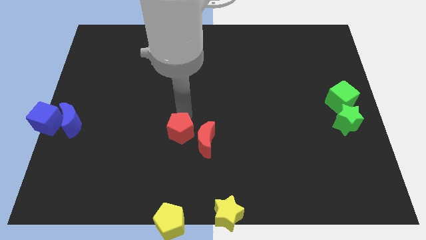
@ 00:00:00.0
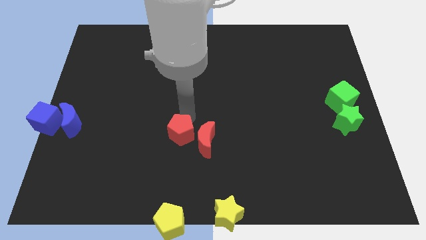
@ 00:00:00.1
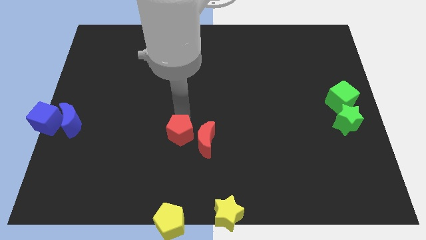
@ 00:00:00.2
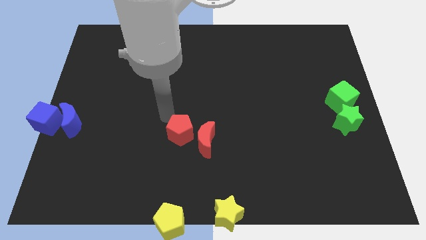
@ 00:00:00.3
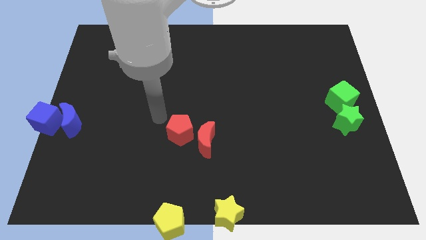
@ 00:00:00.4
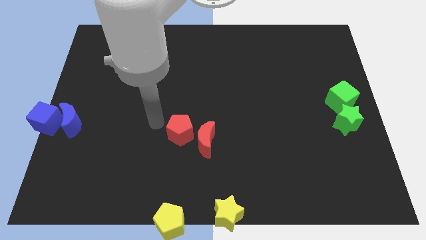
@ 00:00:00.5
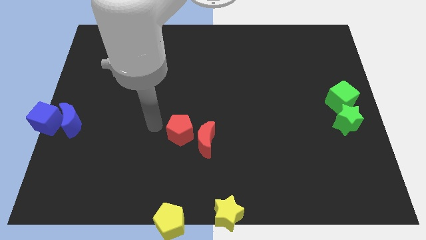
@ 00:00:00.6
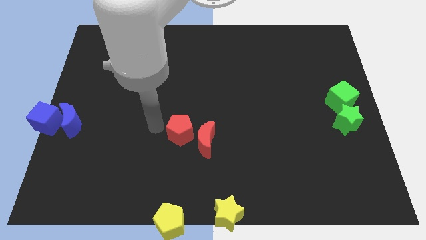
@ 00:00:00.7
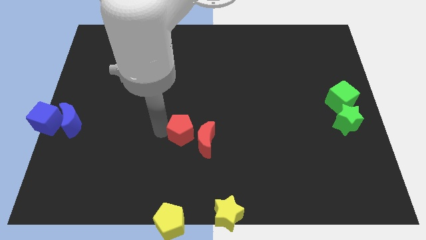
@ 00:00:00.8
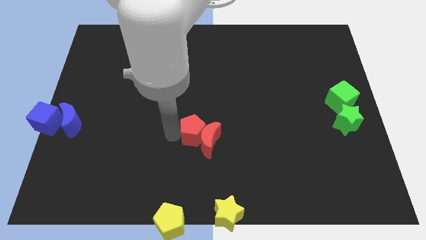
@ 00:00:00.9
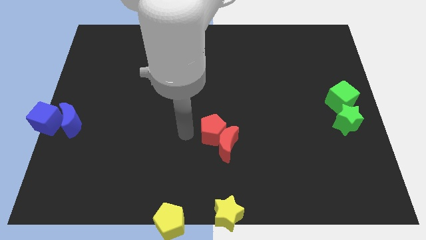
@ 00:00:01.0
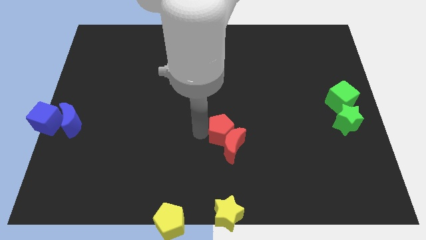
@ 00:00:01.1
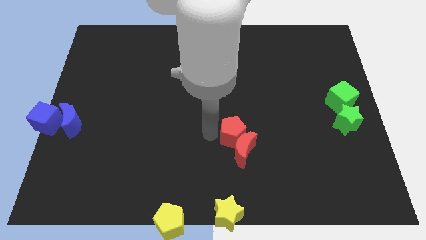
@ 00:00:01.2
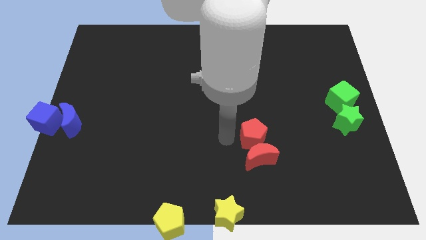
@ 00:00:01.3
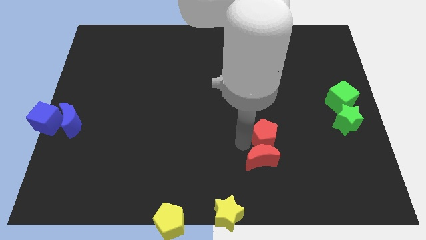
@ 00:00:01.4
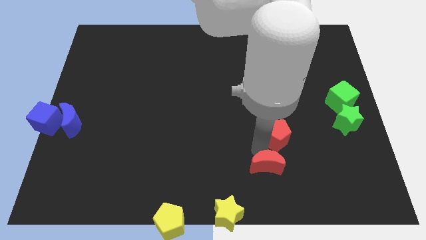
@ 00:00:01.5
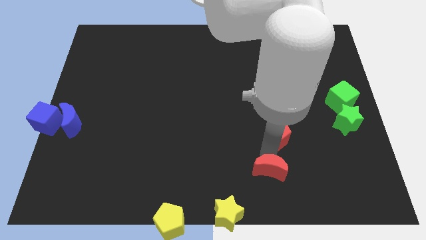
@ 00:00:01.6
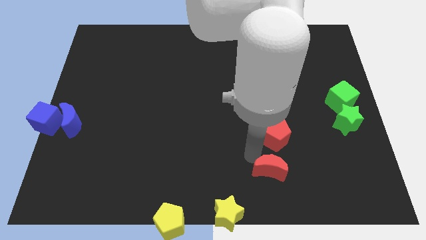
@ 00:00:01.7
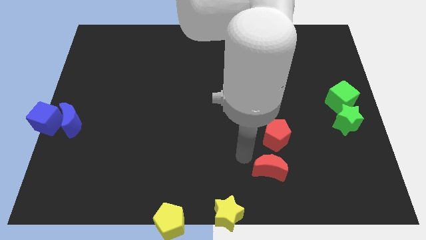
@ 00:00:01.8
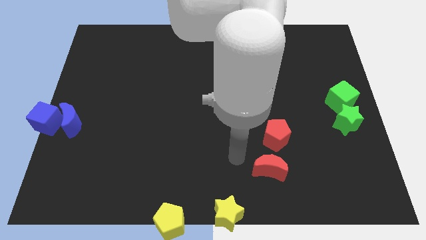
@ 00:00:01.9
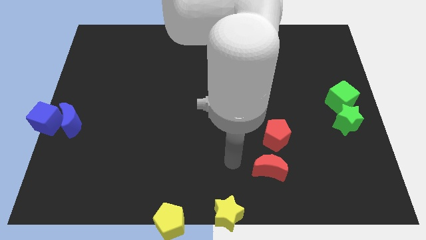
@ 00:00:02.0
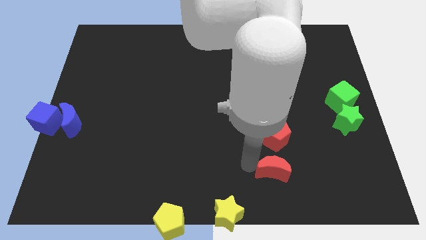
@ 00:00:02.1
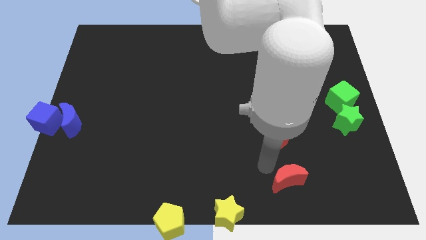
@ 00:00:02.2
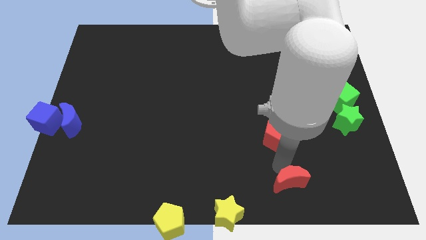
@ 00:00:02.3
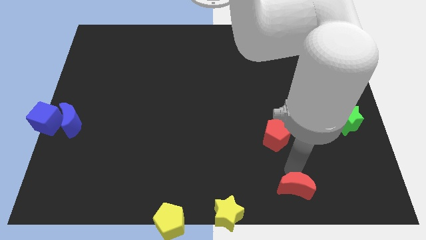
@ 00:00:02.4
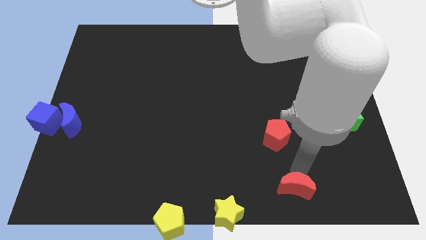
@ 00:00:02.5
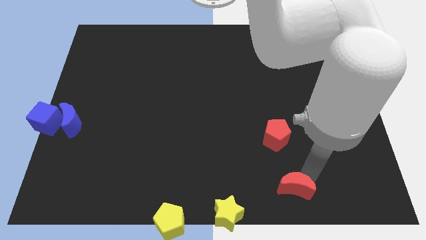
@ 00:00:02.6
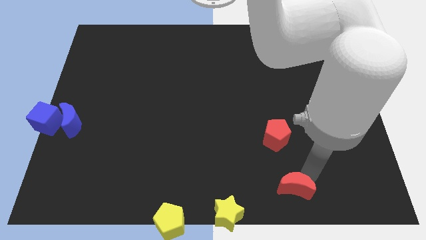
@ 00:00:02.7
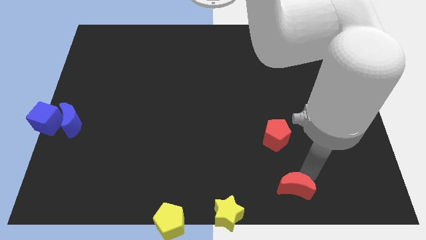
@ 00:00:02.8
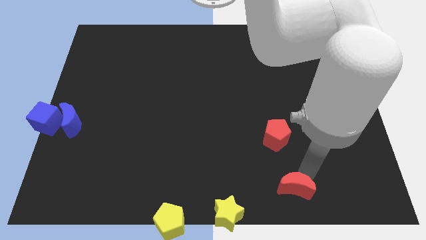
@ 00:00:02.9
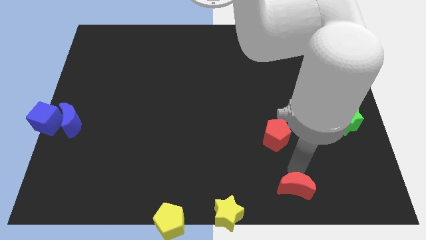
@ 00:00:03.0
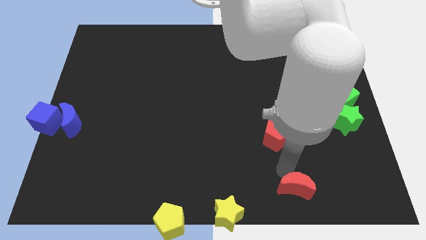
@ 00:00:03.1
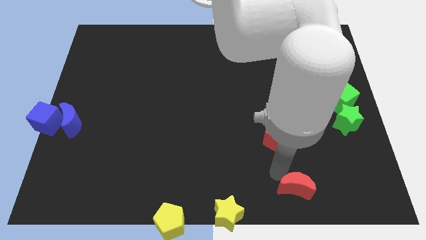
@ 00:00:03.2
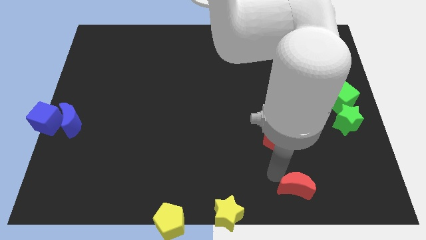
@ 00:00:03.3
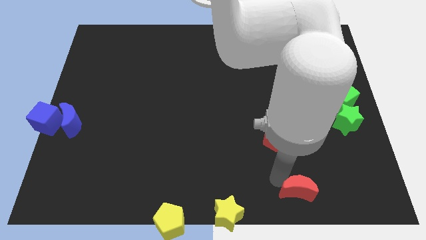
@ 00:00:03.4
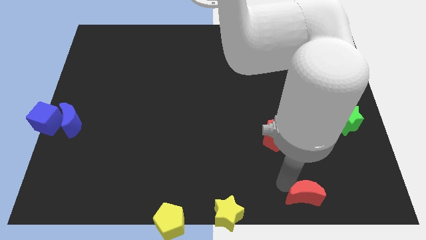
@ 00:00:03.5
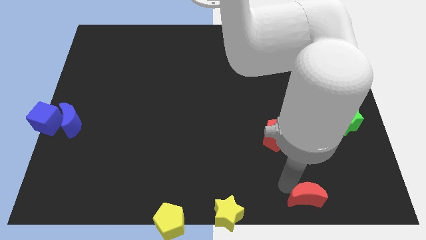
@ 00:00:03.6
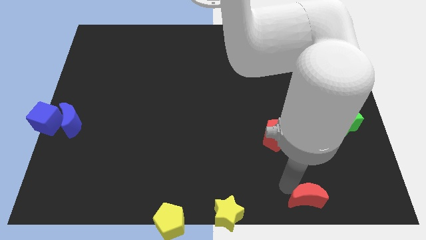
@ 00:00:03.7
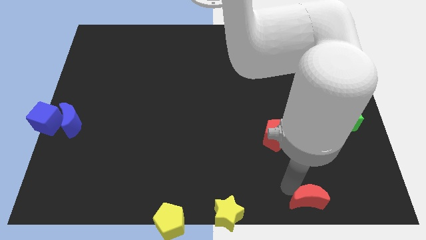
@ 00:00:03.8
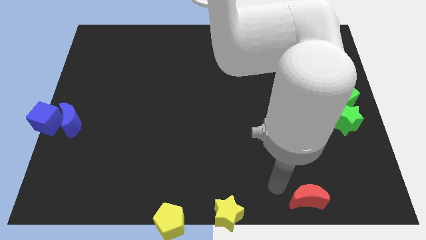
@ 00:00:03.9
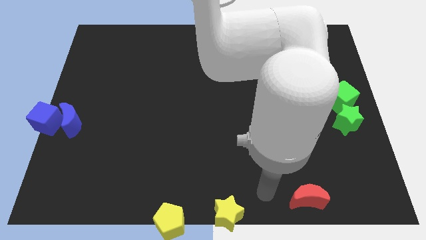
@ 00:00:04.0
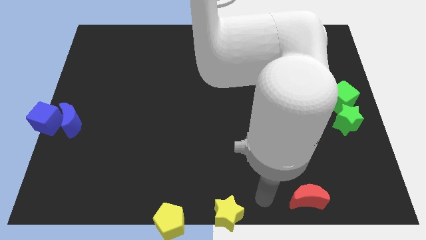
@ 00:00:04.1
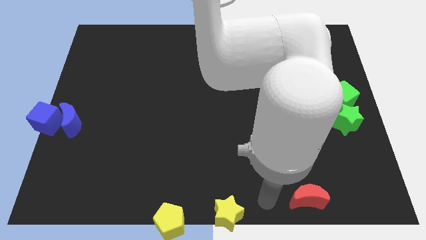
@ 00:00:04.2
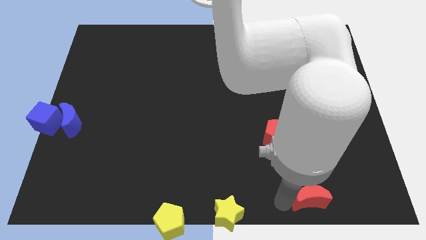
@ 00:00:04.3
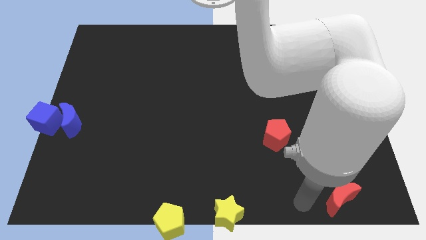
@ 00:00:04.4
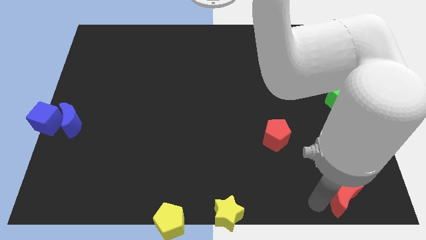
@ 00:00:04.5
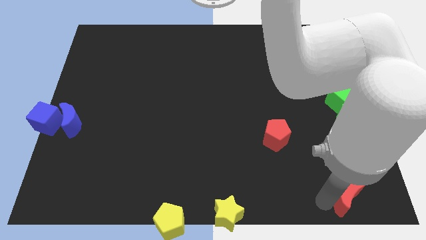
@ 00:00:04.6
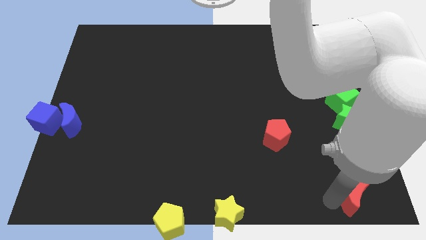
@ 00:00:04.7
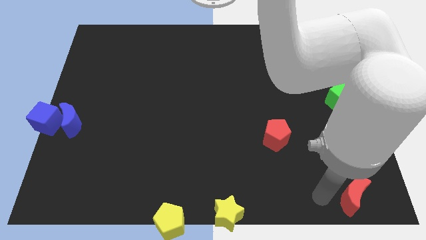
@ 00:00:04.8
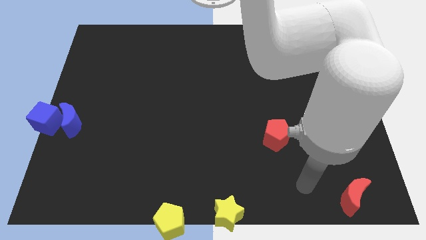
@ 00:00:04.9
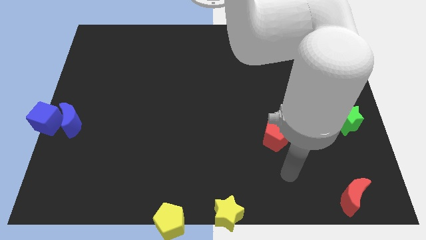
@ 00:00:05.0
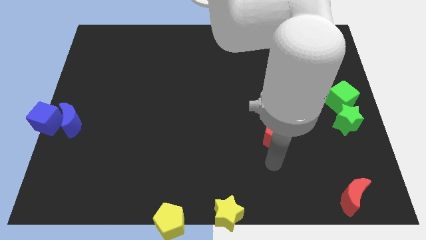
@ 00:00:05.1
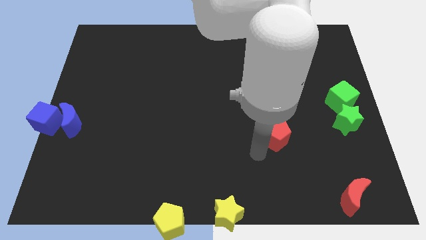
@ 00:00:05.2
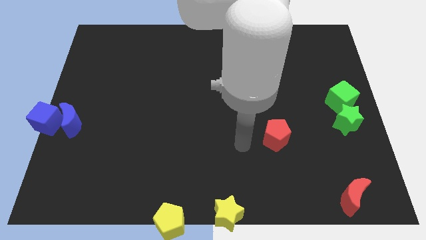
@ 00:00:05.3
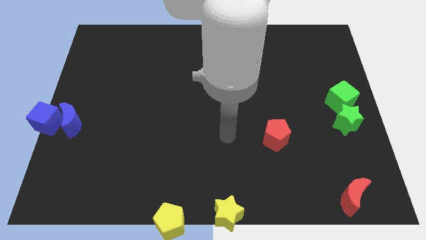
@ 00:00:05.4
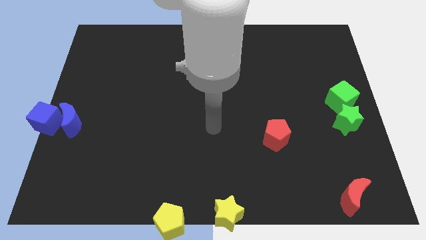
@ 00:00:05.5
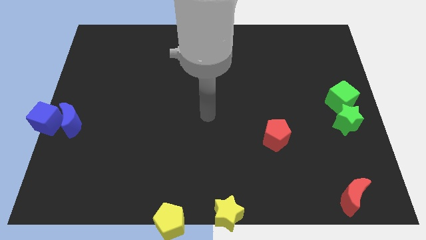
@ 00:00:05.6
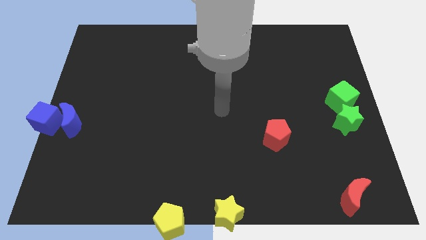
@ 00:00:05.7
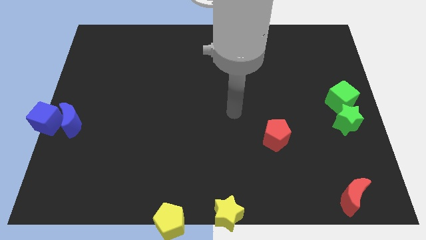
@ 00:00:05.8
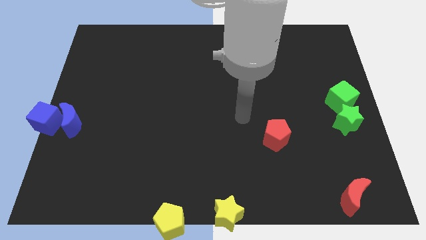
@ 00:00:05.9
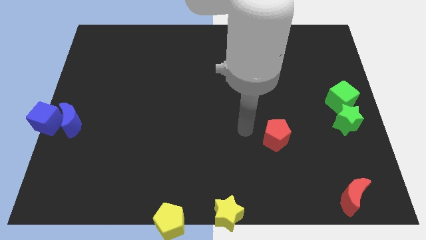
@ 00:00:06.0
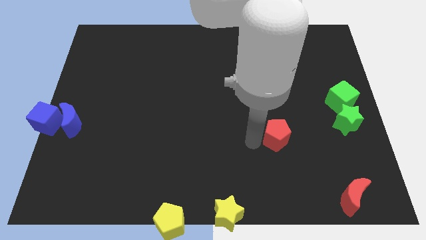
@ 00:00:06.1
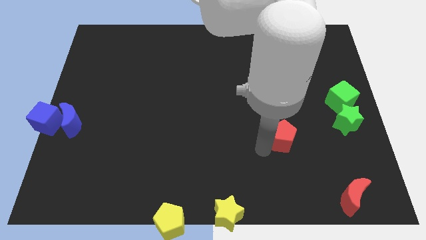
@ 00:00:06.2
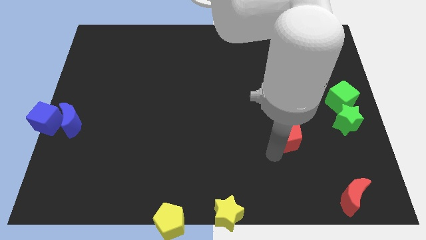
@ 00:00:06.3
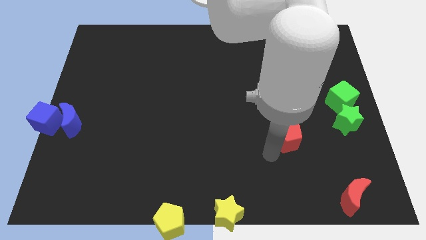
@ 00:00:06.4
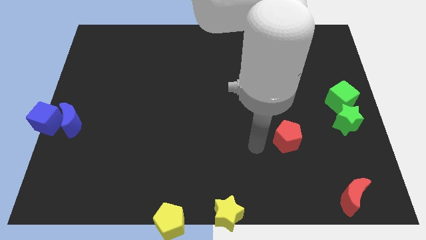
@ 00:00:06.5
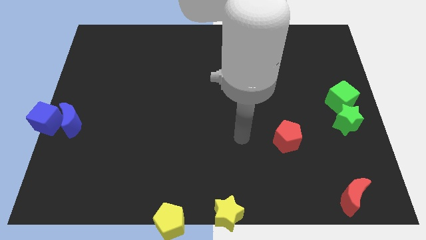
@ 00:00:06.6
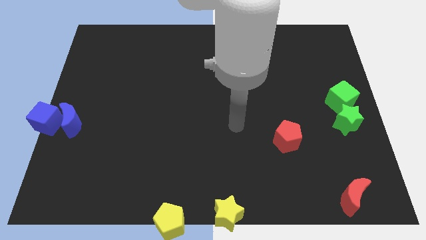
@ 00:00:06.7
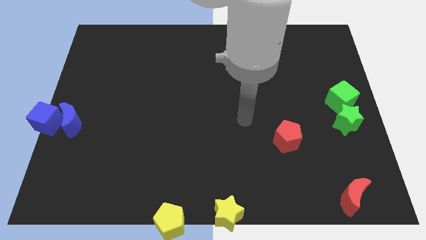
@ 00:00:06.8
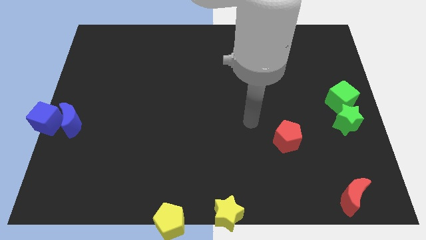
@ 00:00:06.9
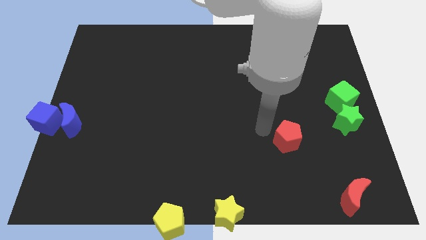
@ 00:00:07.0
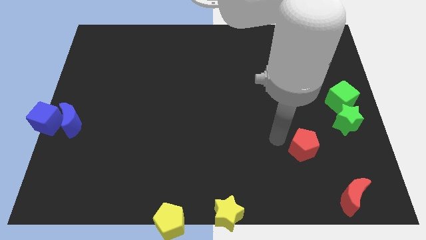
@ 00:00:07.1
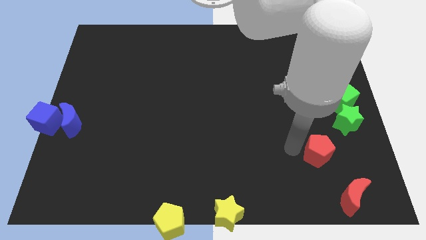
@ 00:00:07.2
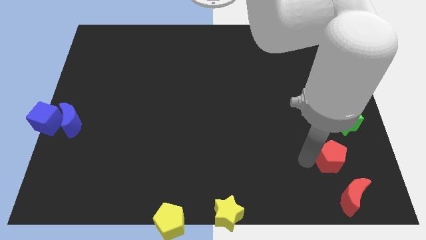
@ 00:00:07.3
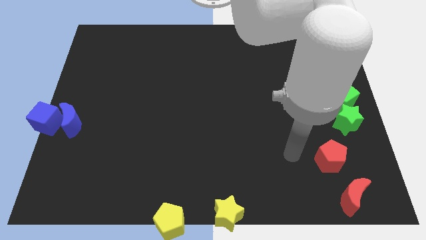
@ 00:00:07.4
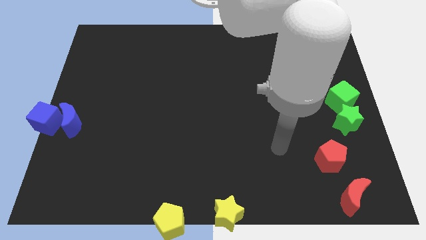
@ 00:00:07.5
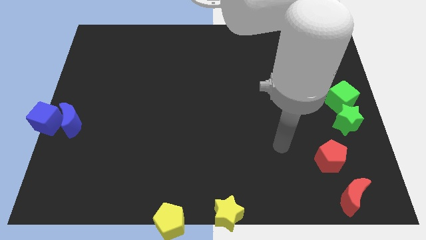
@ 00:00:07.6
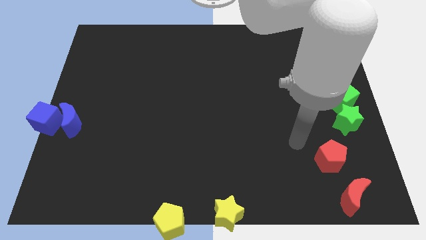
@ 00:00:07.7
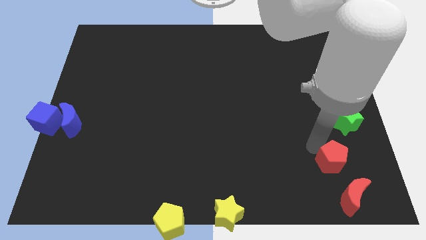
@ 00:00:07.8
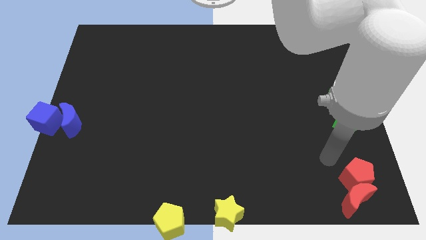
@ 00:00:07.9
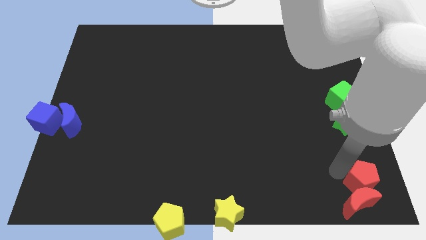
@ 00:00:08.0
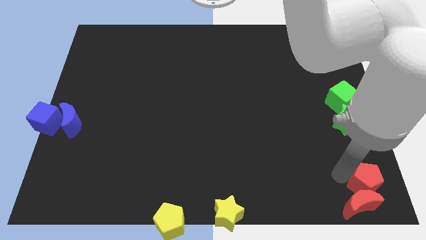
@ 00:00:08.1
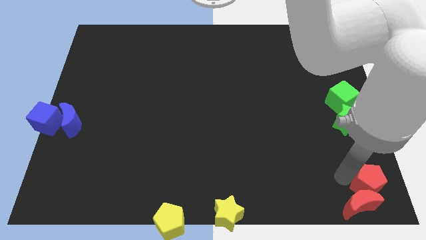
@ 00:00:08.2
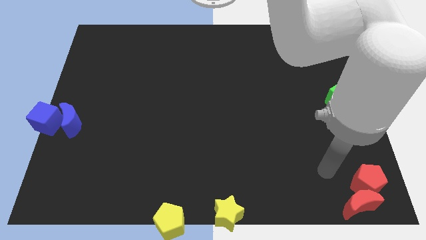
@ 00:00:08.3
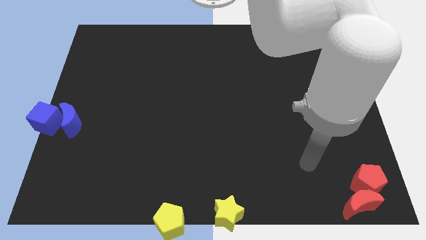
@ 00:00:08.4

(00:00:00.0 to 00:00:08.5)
move the red crescent and the red pentagon to the bottom right corner of the board

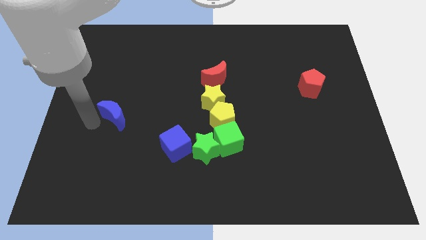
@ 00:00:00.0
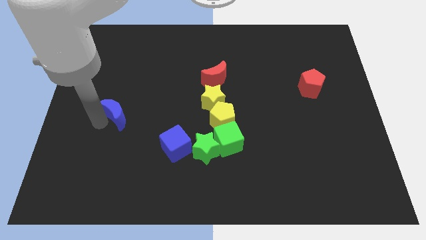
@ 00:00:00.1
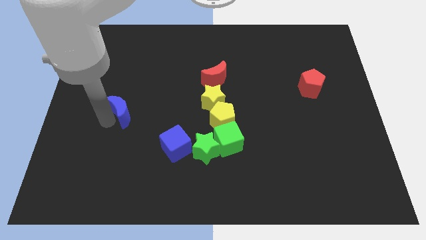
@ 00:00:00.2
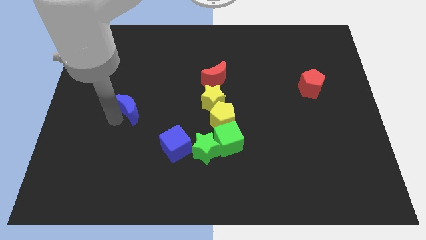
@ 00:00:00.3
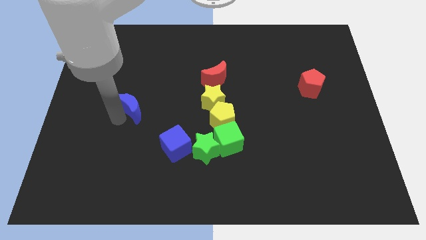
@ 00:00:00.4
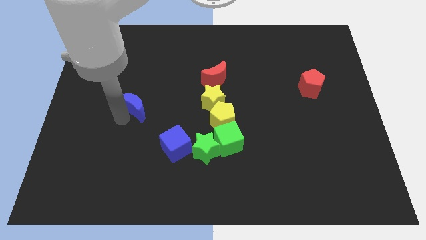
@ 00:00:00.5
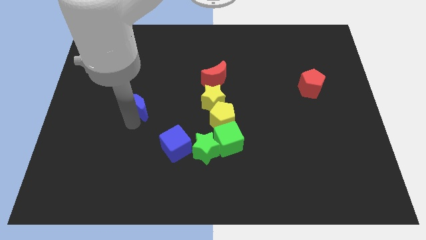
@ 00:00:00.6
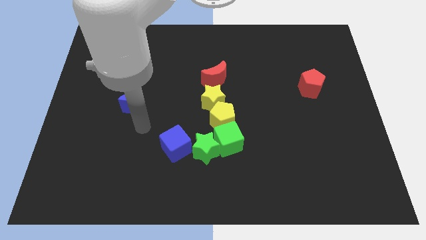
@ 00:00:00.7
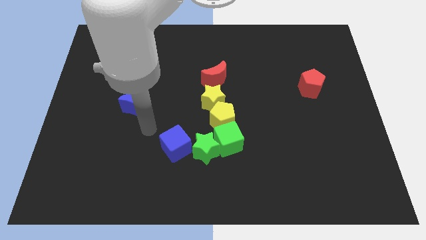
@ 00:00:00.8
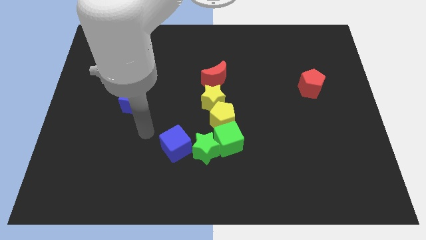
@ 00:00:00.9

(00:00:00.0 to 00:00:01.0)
slightly move the blue moon towards up
